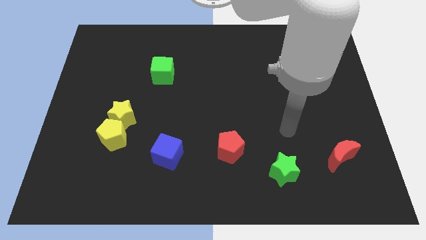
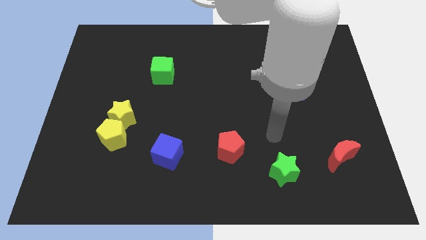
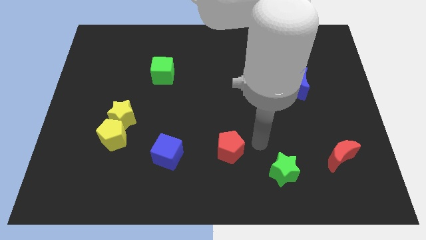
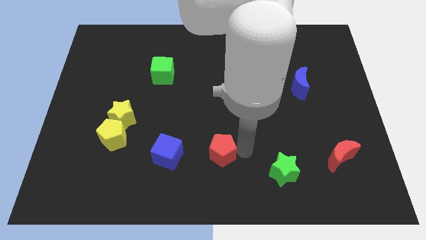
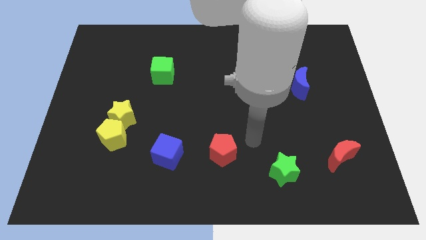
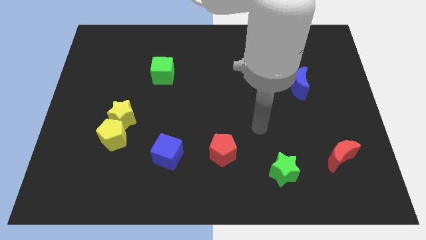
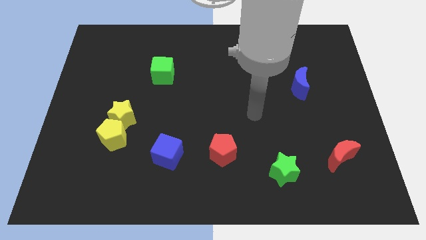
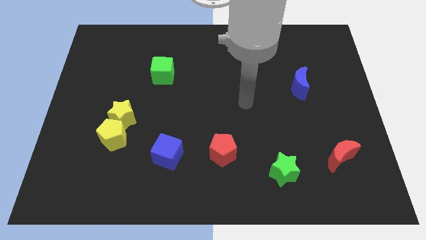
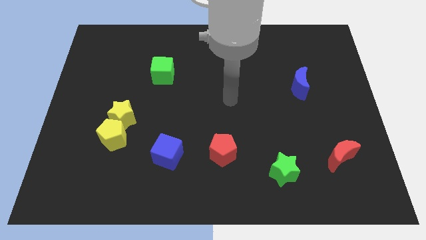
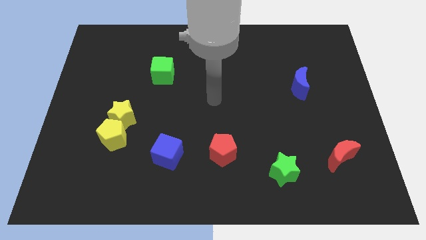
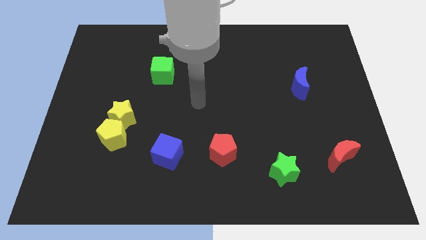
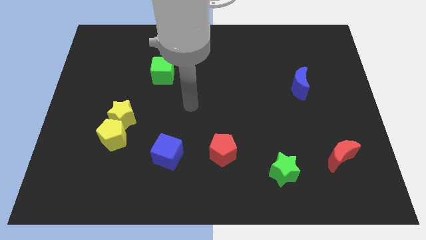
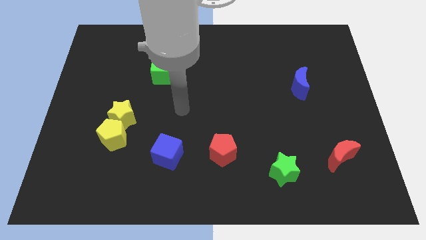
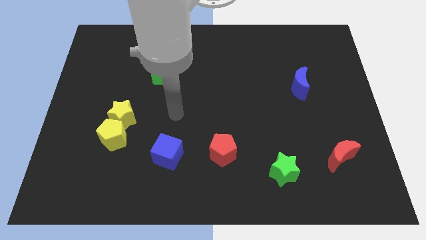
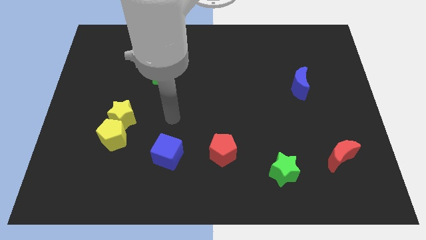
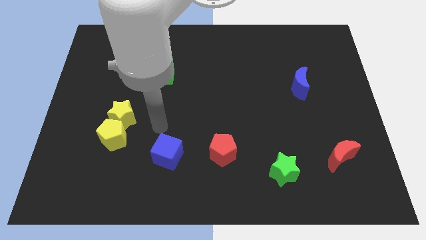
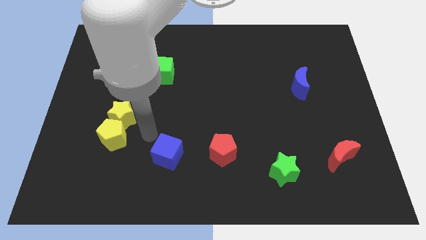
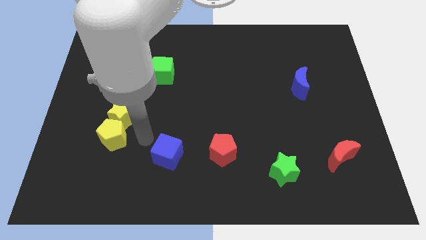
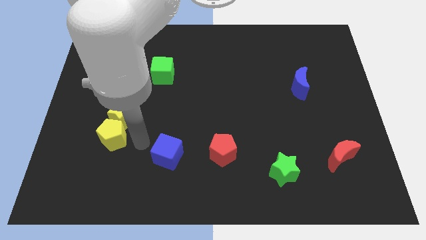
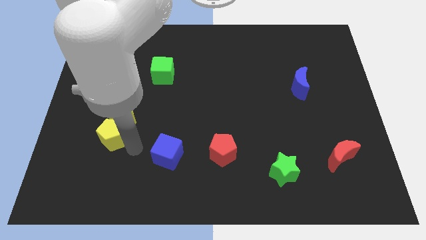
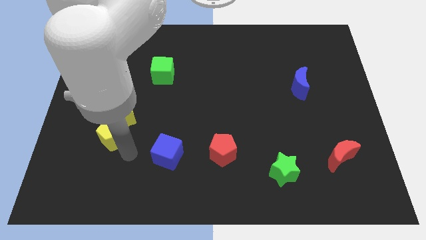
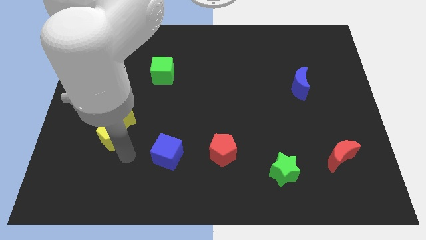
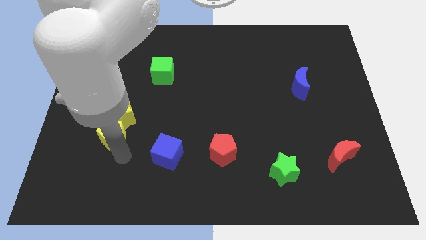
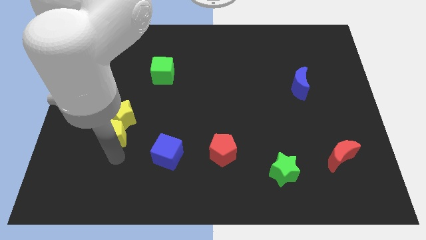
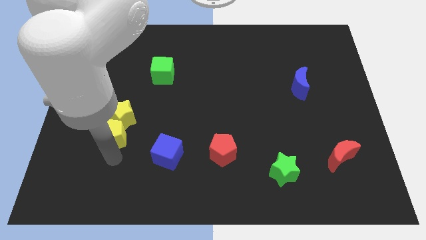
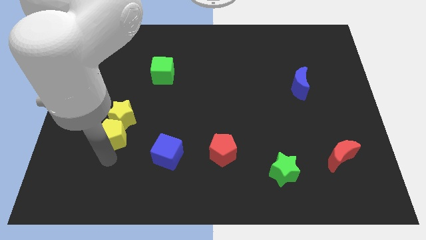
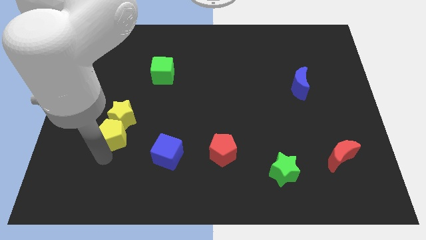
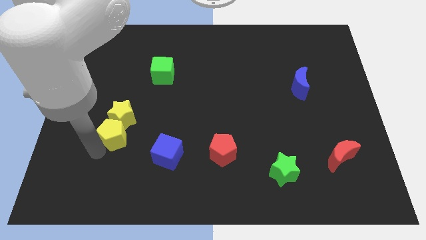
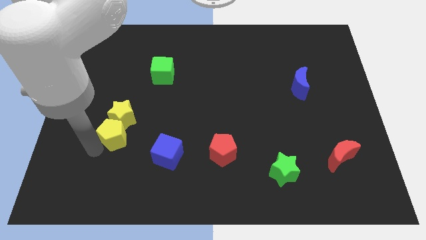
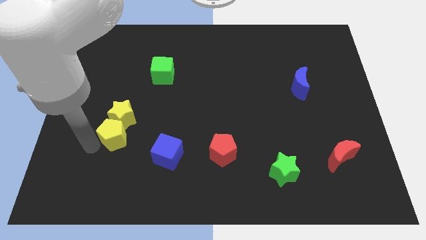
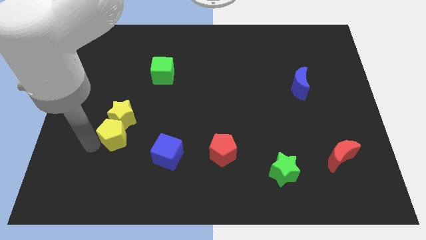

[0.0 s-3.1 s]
push the red pentagon slightly to the left side of the board

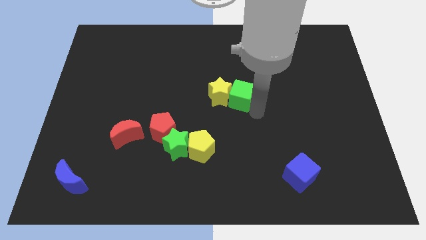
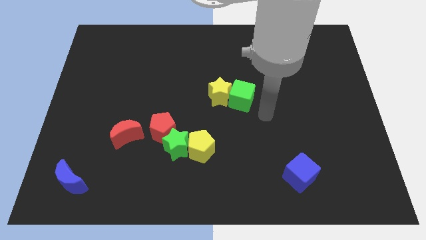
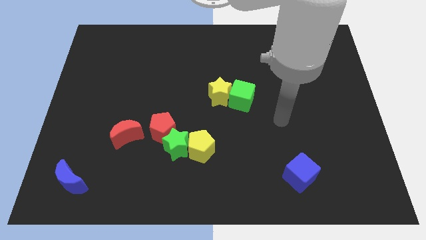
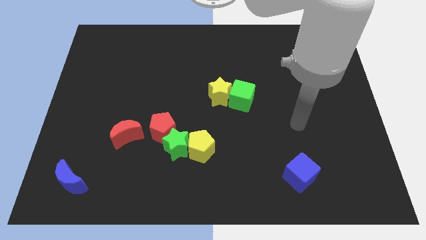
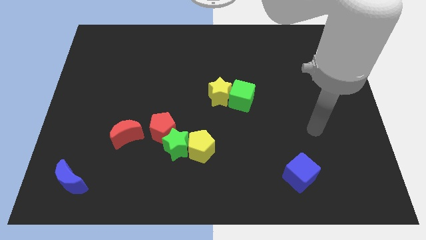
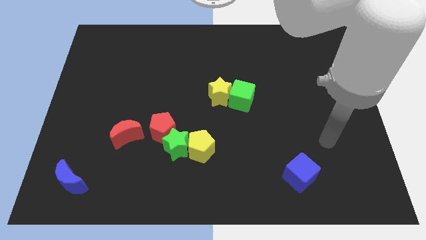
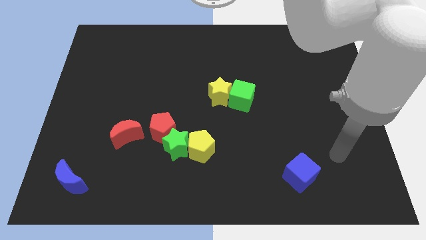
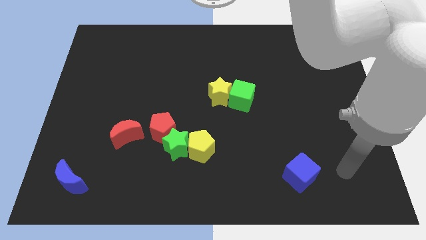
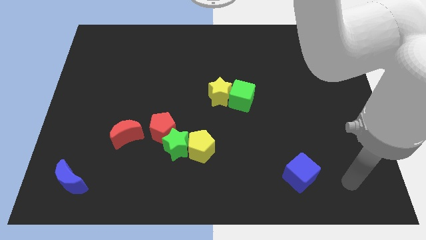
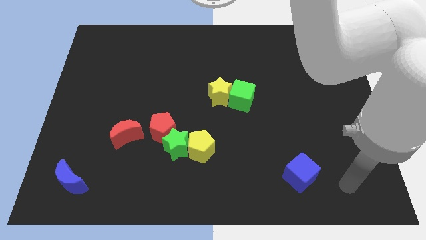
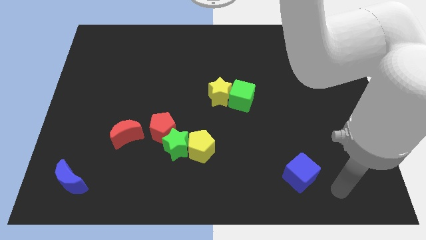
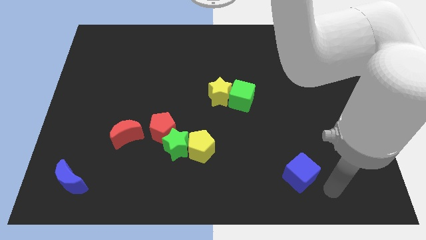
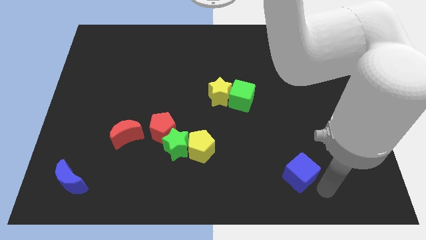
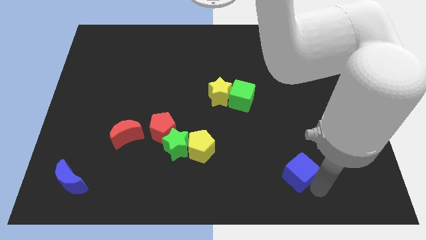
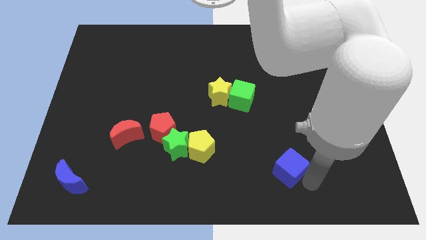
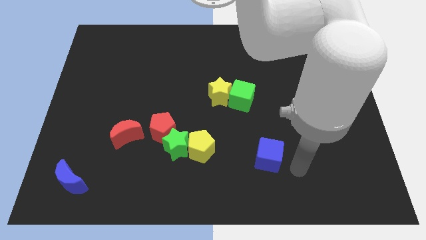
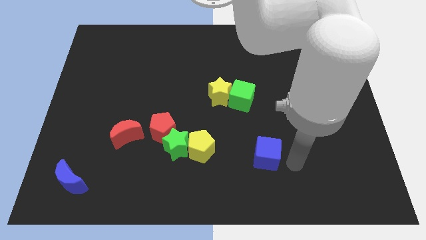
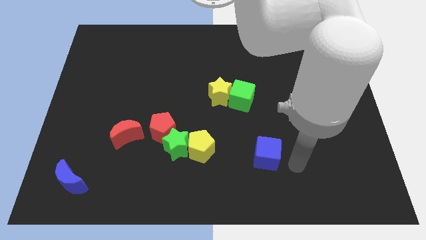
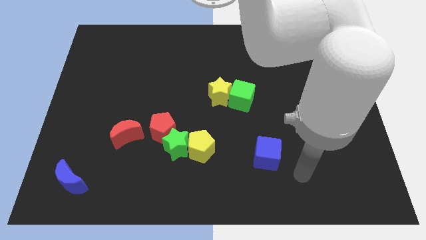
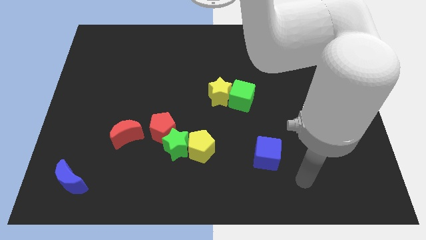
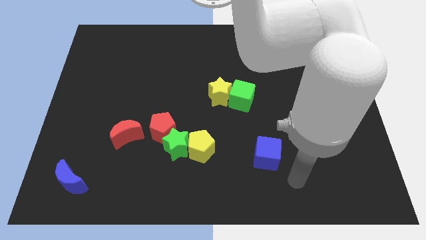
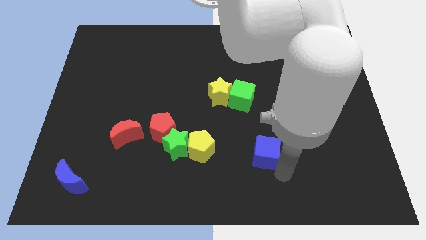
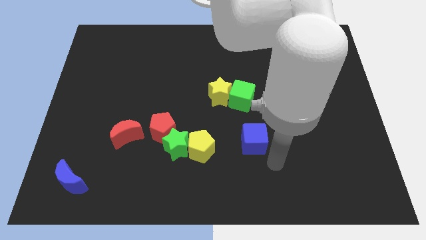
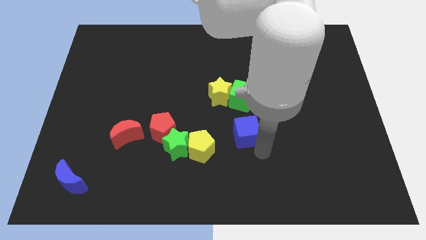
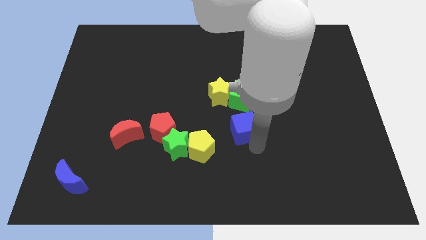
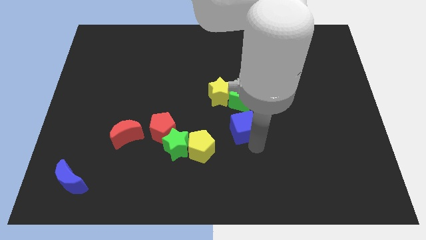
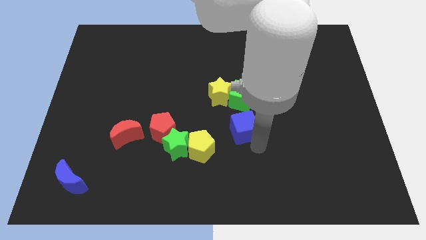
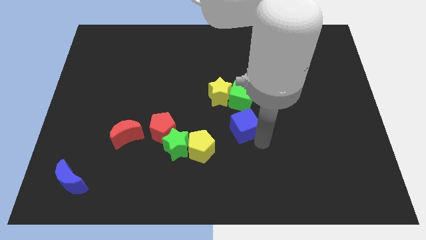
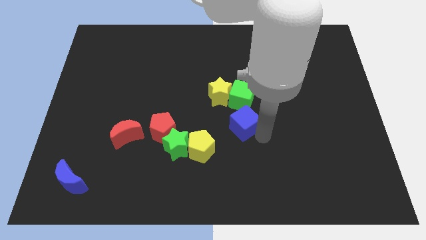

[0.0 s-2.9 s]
place the blue cube down to the green cube

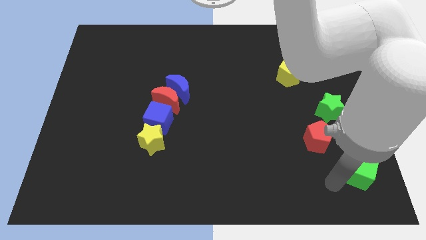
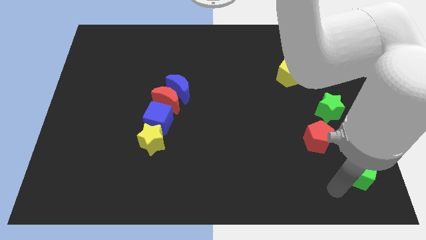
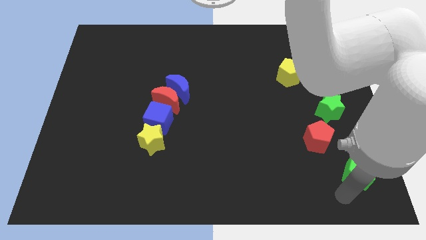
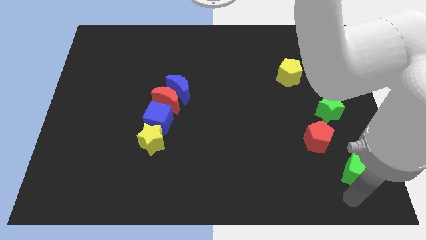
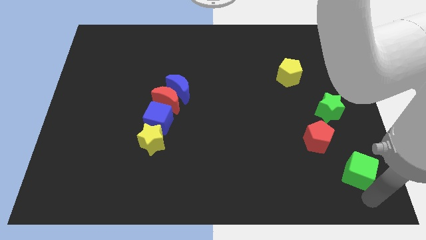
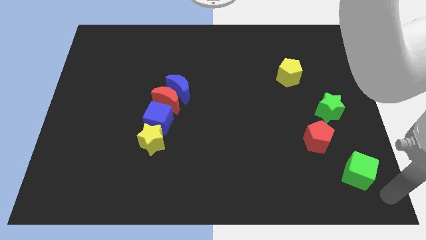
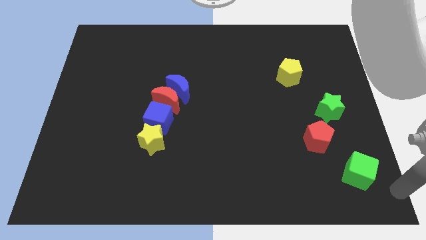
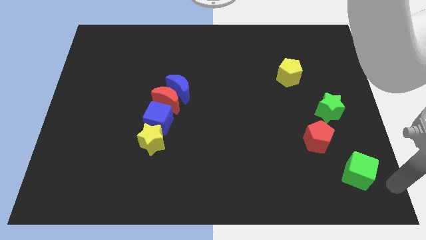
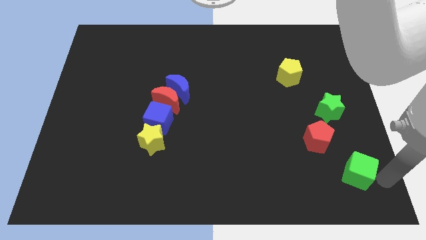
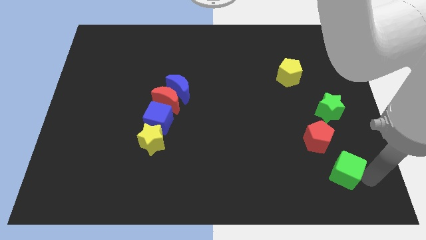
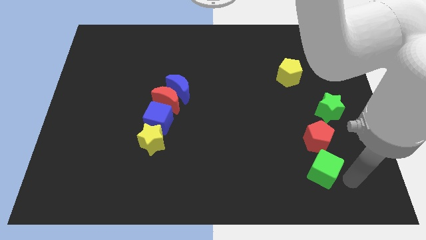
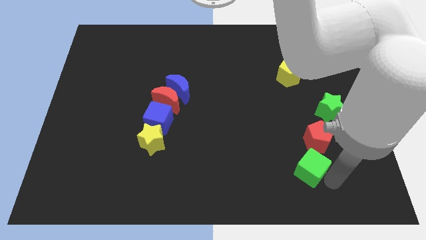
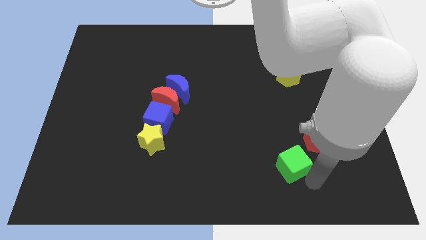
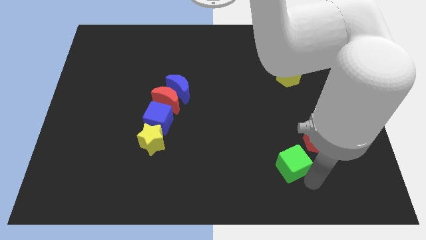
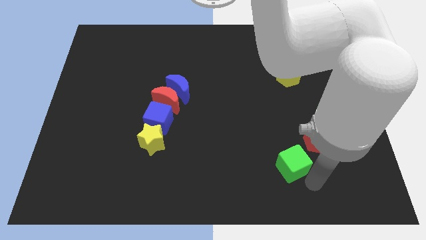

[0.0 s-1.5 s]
push the green cube to the bottom left of the red pentagon

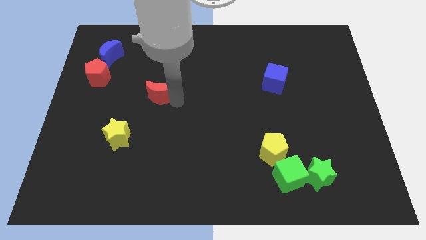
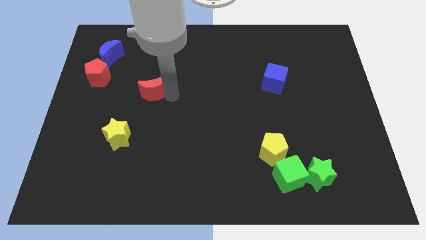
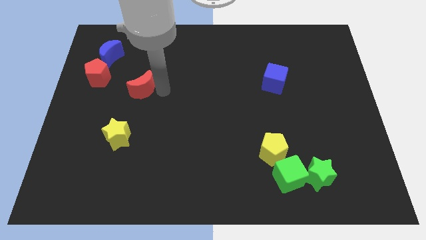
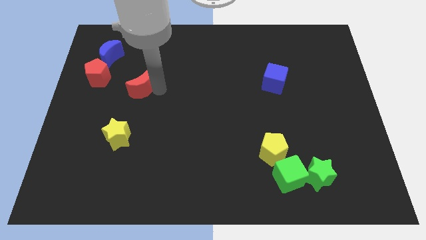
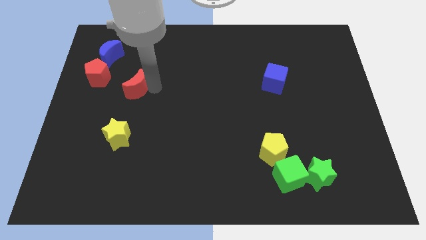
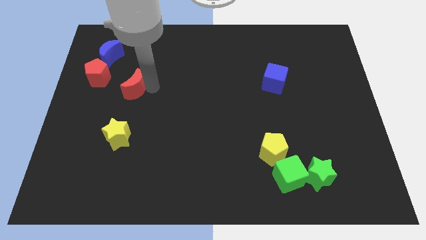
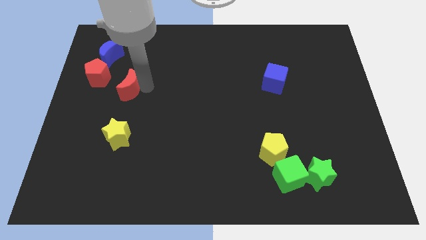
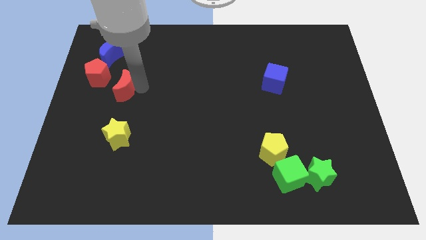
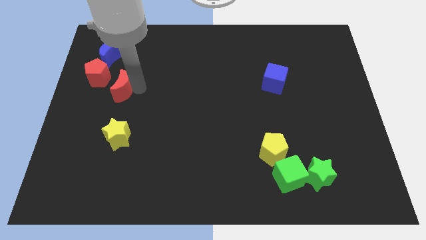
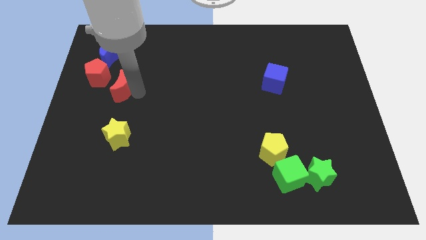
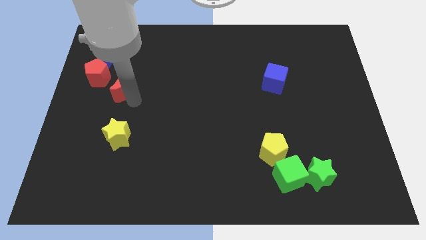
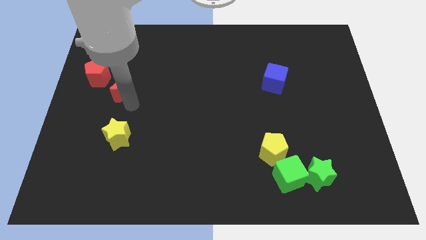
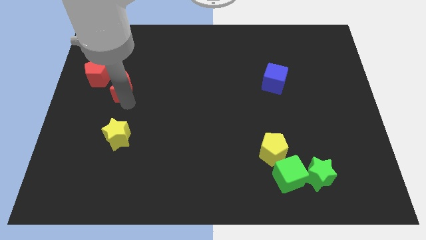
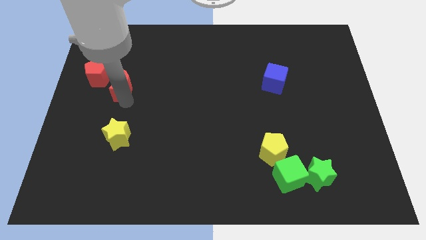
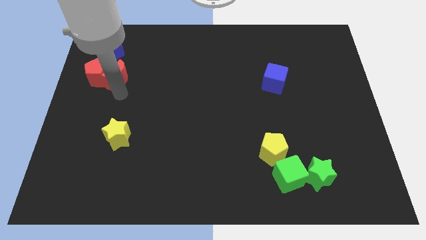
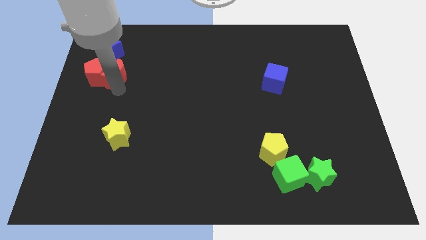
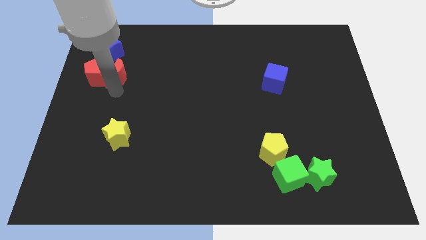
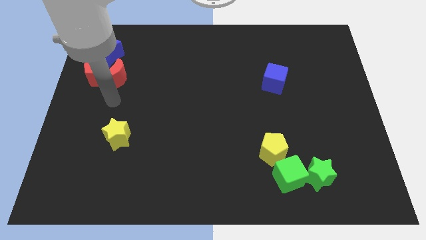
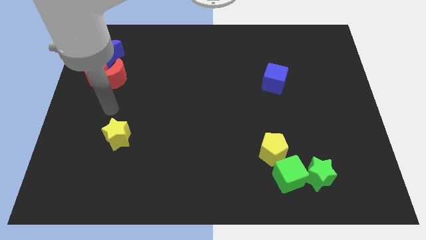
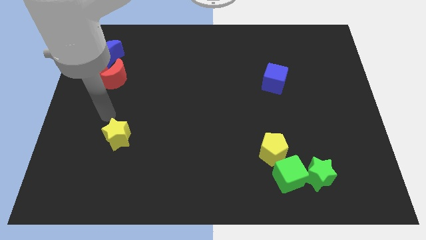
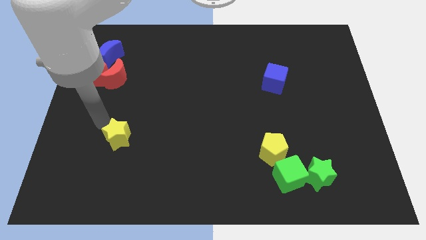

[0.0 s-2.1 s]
move red moon into red pentagon
